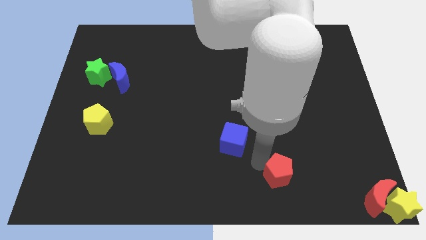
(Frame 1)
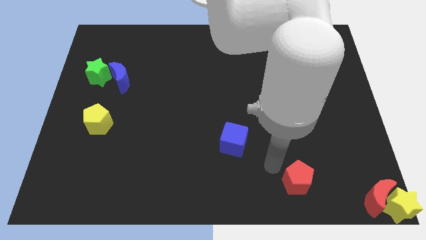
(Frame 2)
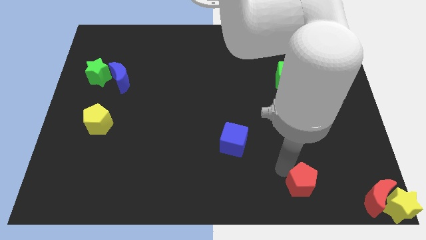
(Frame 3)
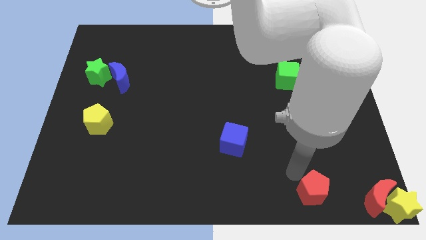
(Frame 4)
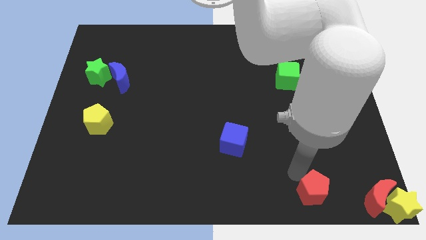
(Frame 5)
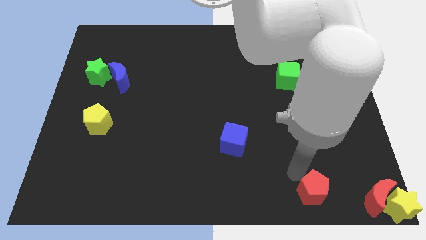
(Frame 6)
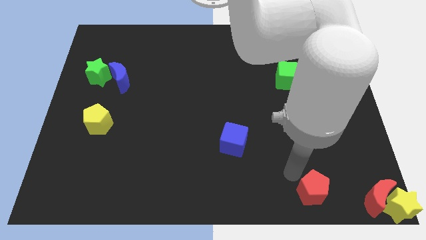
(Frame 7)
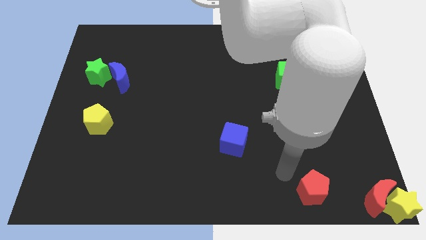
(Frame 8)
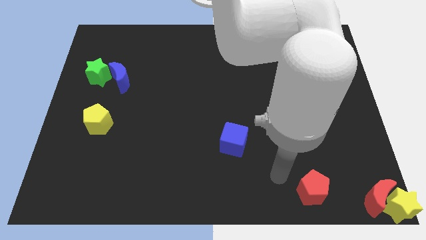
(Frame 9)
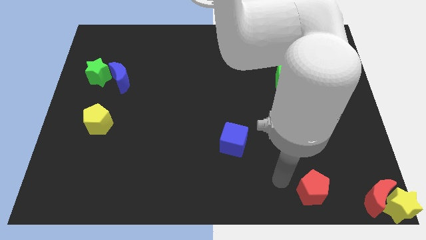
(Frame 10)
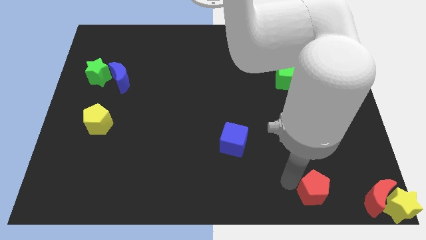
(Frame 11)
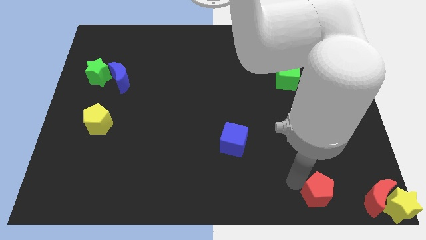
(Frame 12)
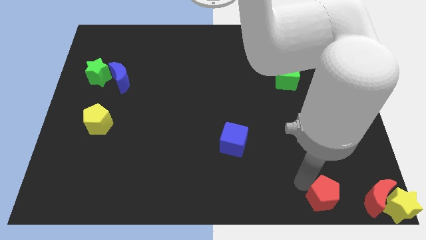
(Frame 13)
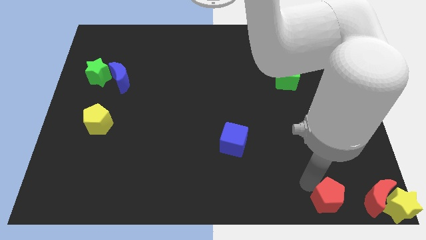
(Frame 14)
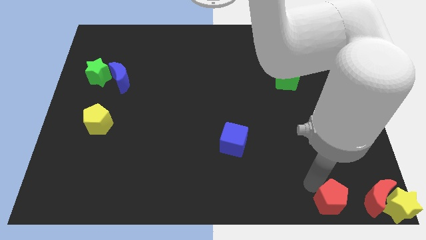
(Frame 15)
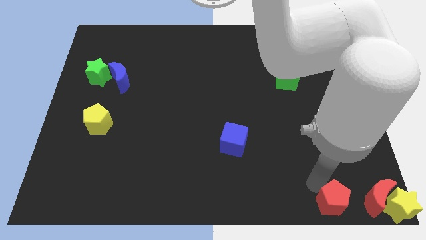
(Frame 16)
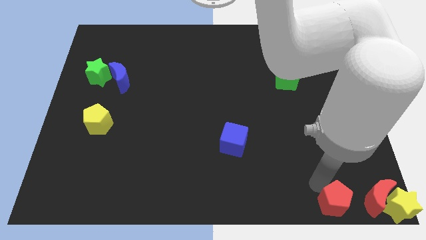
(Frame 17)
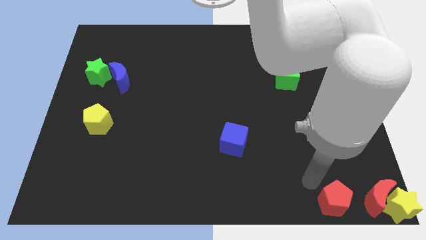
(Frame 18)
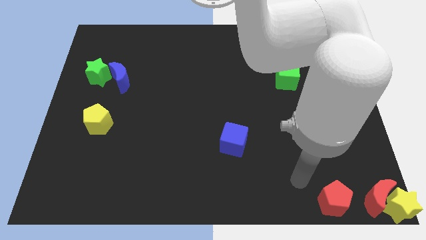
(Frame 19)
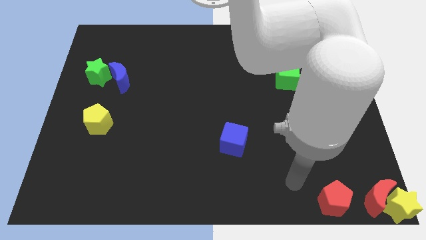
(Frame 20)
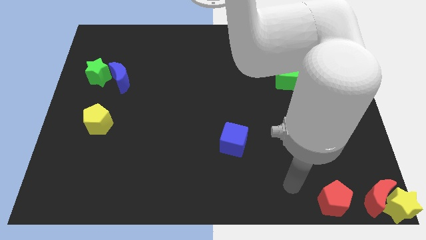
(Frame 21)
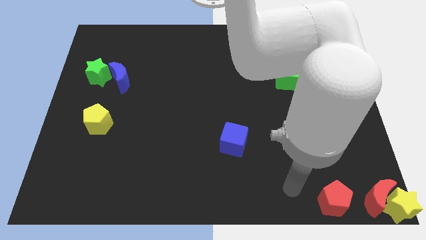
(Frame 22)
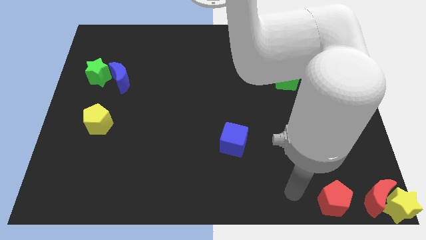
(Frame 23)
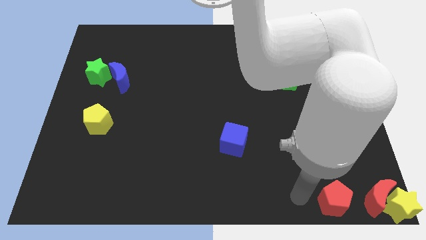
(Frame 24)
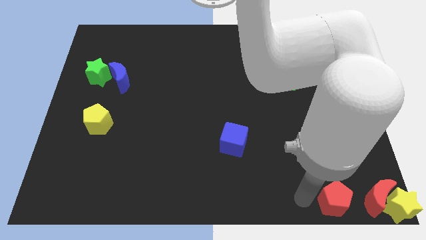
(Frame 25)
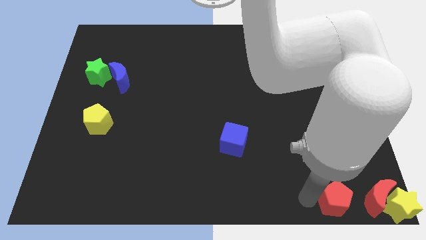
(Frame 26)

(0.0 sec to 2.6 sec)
place red pentagon opposite to red crescent

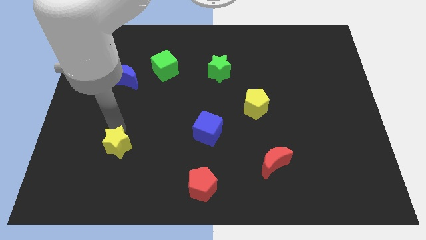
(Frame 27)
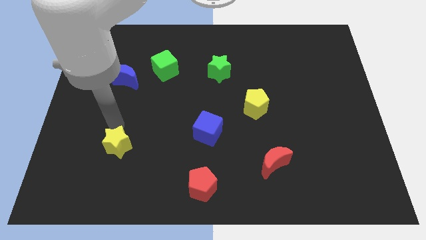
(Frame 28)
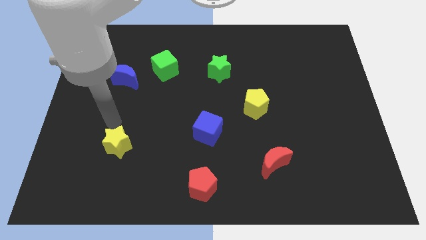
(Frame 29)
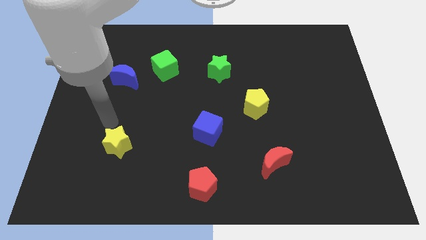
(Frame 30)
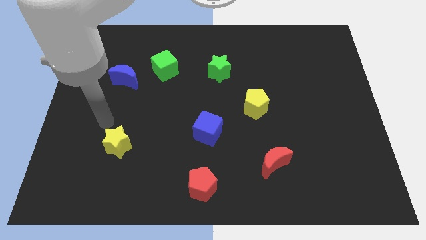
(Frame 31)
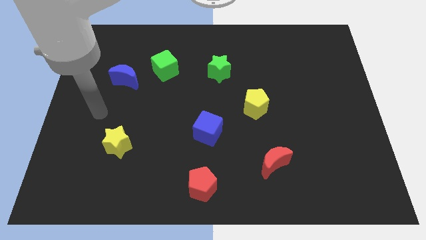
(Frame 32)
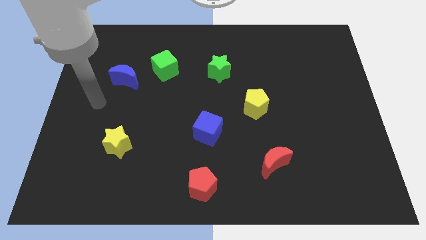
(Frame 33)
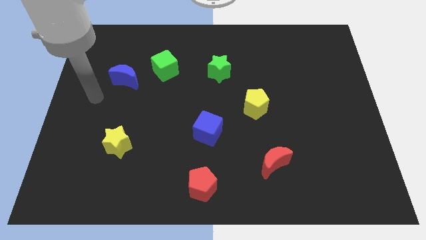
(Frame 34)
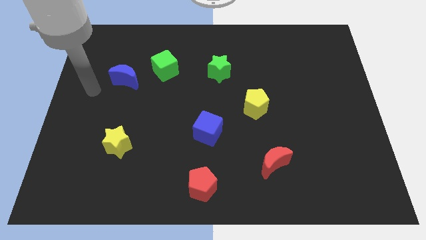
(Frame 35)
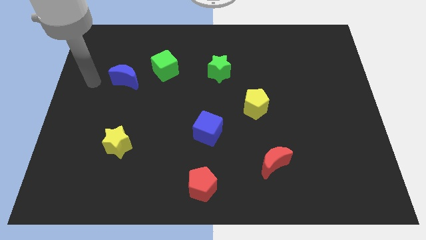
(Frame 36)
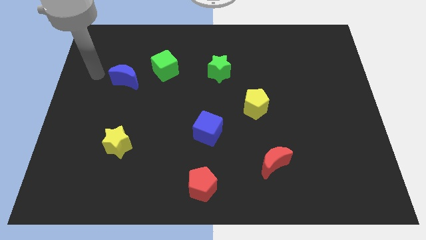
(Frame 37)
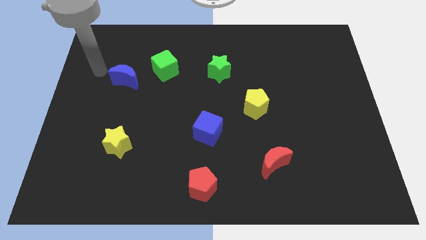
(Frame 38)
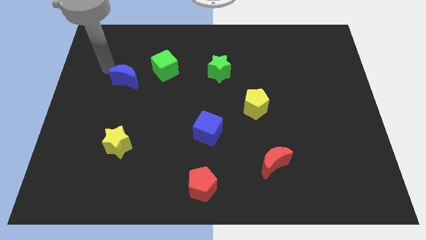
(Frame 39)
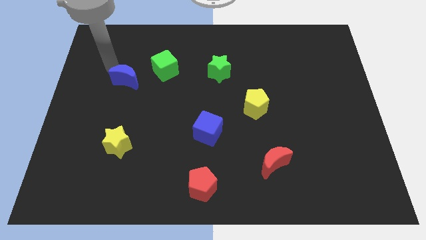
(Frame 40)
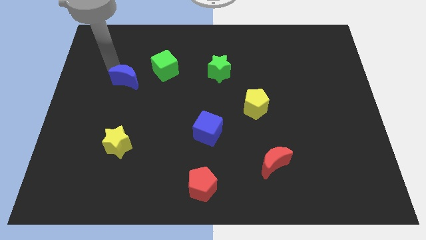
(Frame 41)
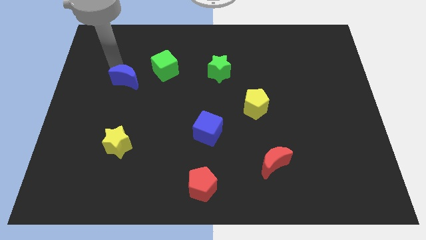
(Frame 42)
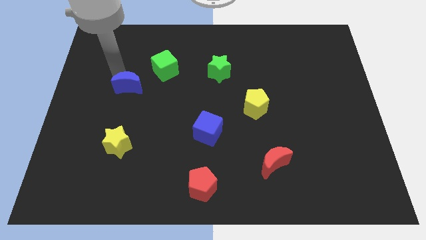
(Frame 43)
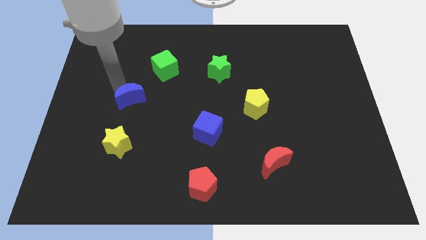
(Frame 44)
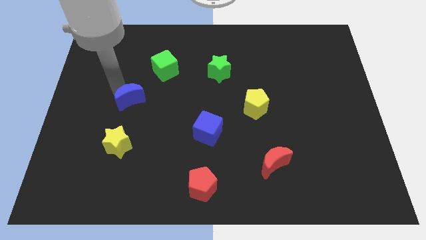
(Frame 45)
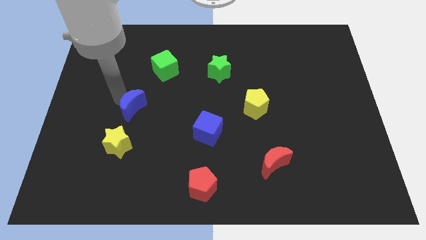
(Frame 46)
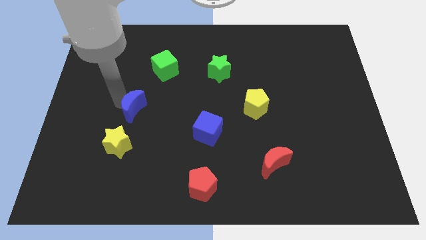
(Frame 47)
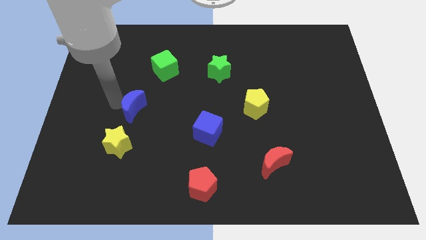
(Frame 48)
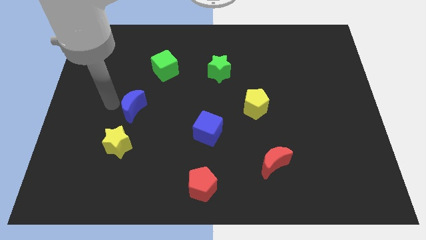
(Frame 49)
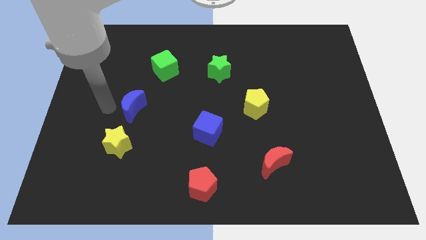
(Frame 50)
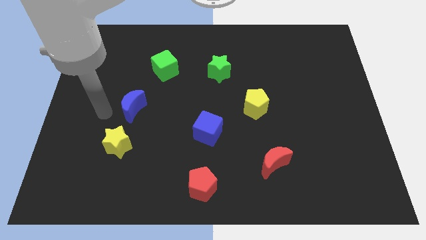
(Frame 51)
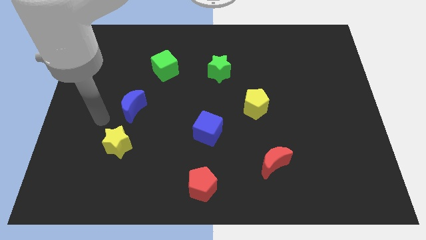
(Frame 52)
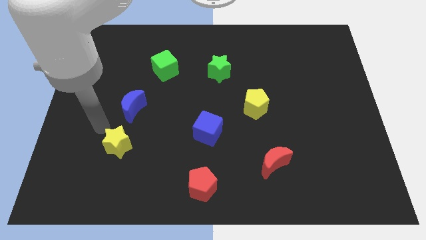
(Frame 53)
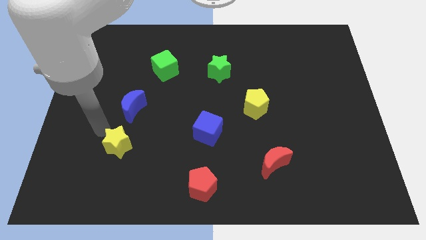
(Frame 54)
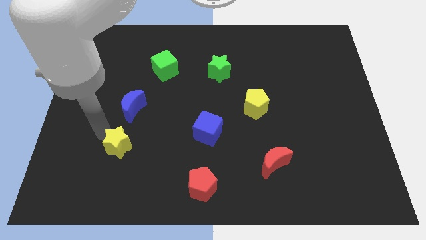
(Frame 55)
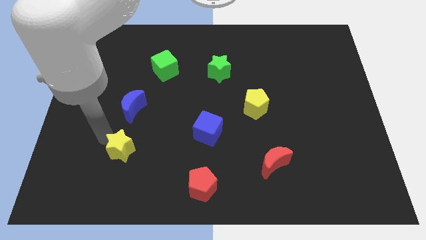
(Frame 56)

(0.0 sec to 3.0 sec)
push the blue crescent above the yellow star

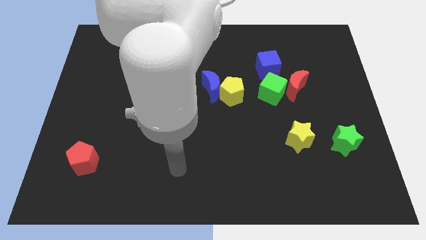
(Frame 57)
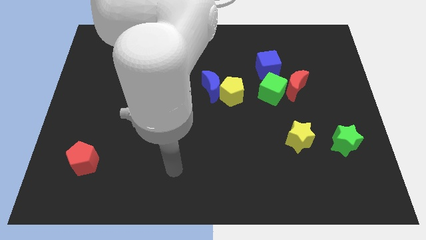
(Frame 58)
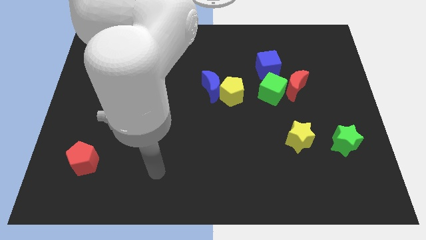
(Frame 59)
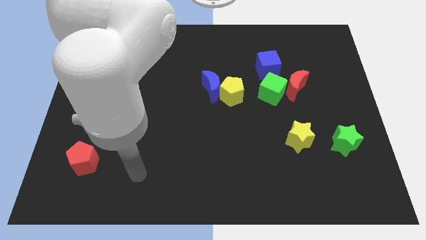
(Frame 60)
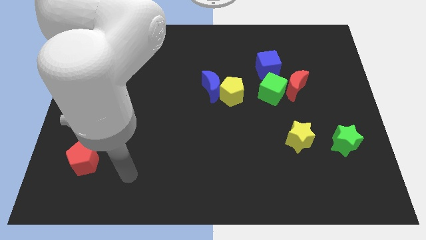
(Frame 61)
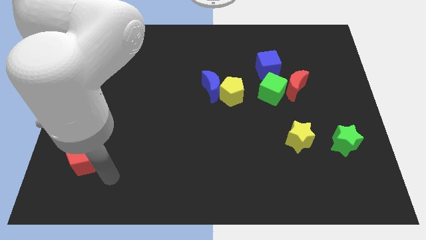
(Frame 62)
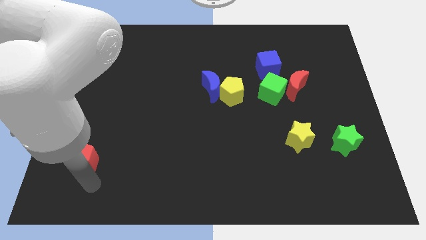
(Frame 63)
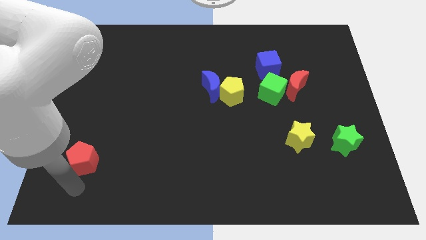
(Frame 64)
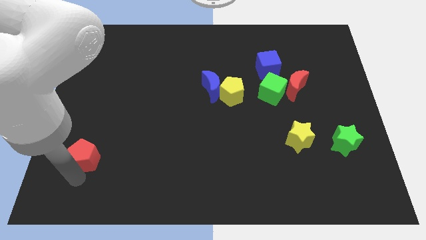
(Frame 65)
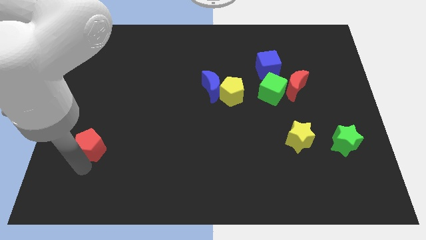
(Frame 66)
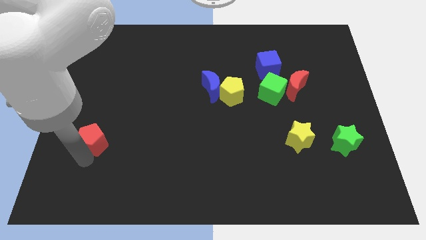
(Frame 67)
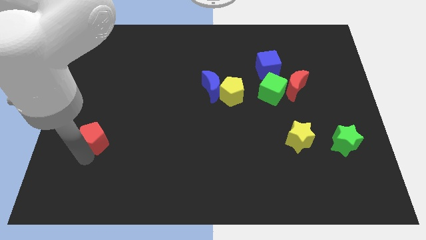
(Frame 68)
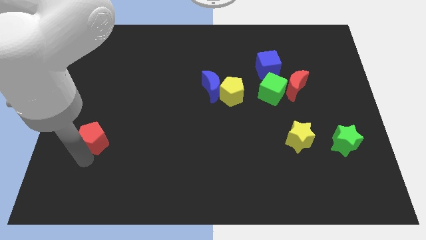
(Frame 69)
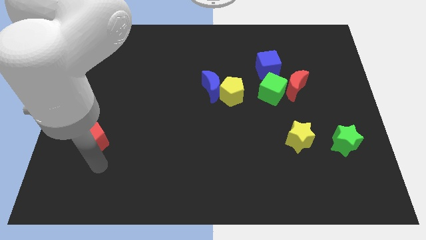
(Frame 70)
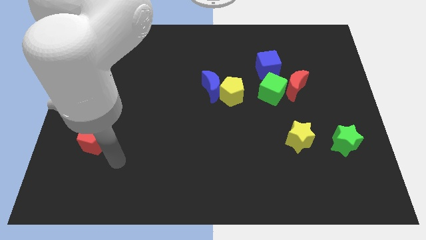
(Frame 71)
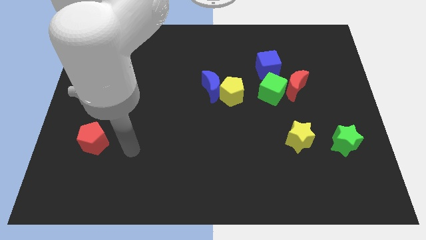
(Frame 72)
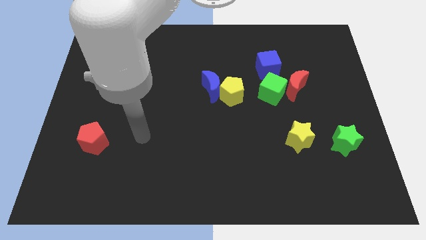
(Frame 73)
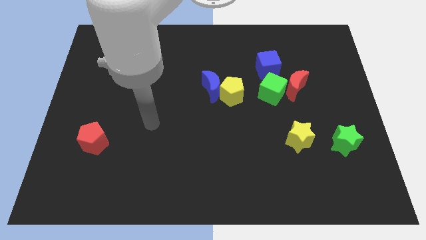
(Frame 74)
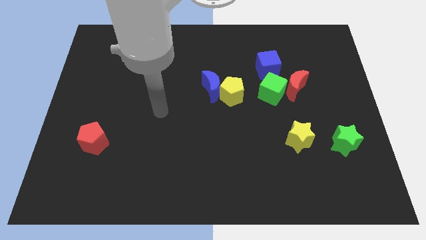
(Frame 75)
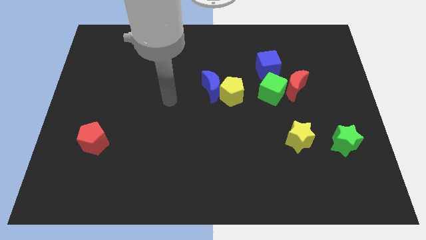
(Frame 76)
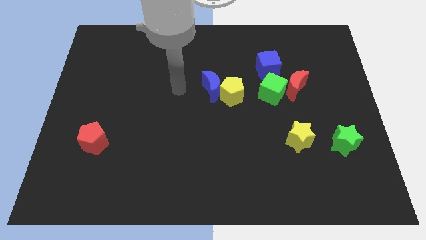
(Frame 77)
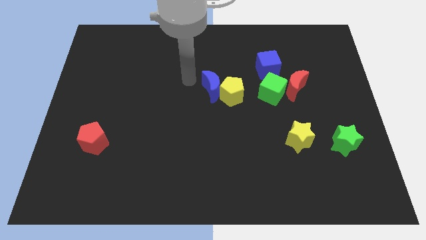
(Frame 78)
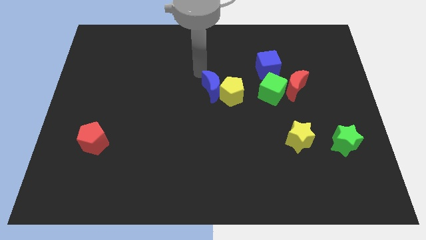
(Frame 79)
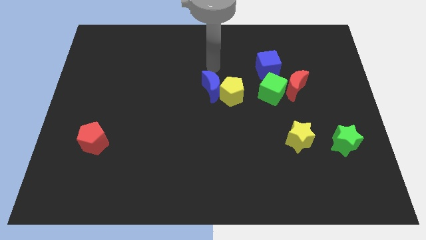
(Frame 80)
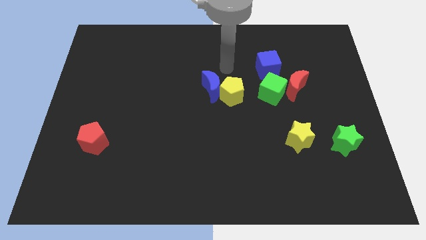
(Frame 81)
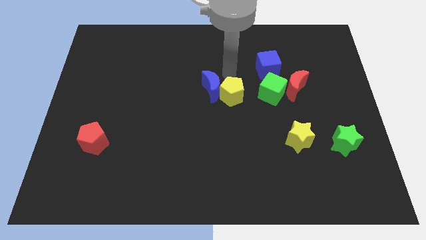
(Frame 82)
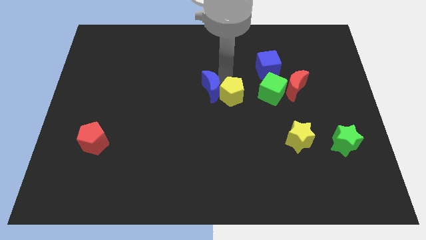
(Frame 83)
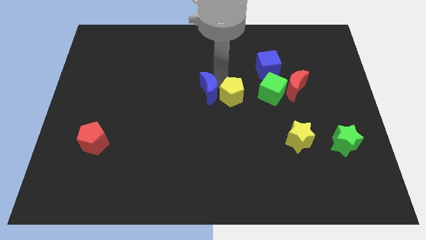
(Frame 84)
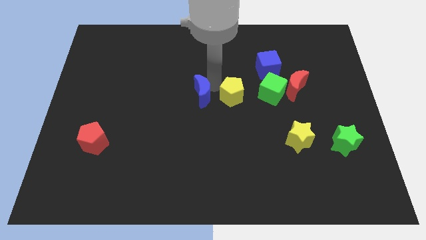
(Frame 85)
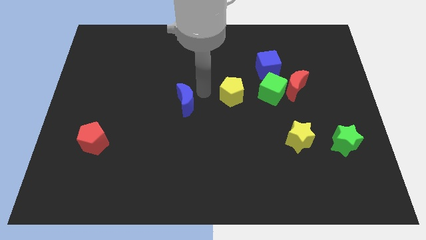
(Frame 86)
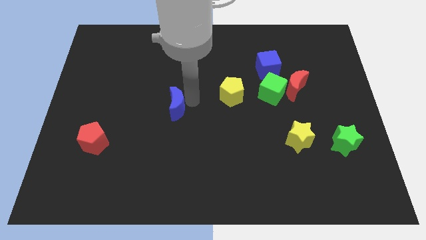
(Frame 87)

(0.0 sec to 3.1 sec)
place your arm to the right of the blue moon

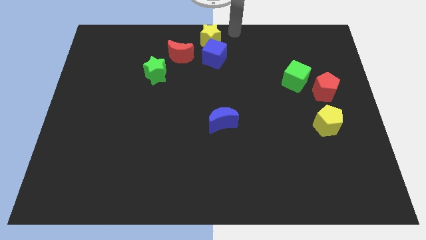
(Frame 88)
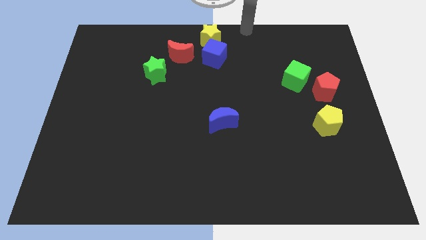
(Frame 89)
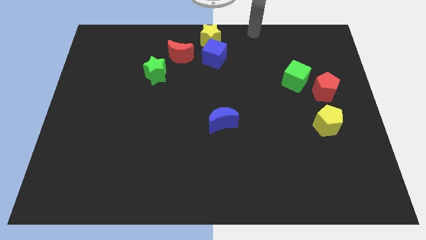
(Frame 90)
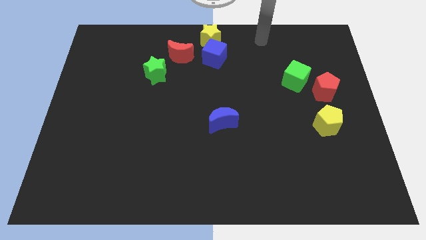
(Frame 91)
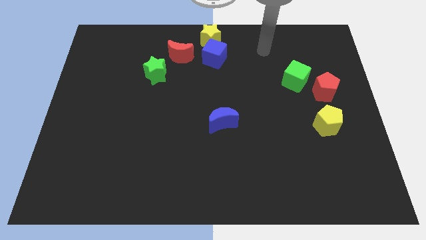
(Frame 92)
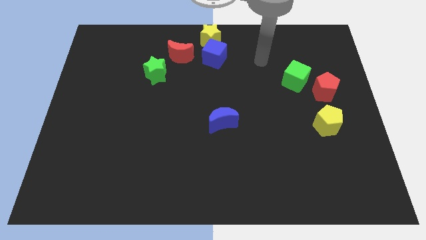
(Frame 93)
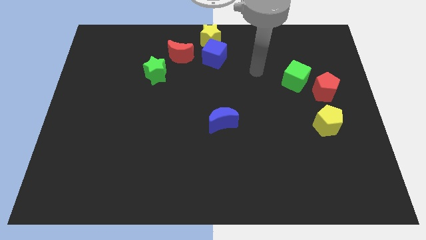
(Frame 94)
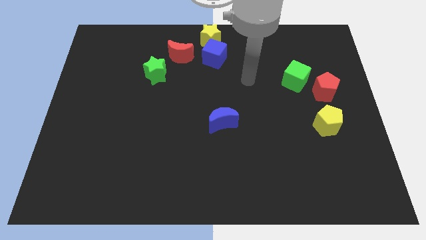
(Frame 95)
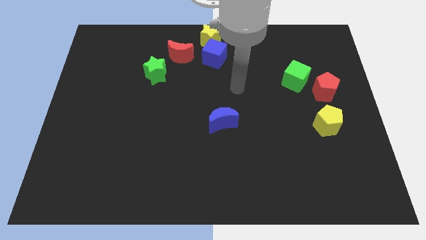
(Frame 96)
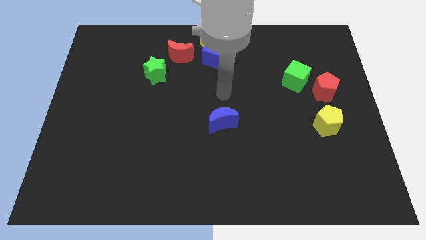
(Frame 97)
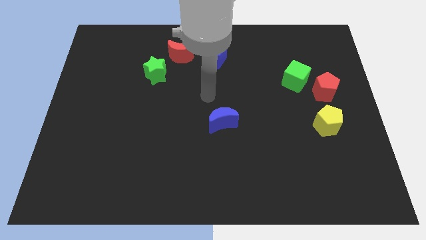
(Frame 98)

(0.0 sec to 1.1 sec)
move the arm away from the yellow star
